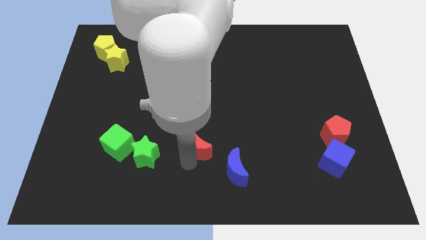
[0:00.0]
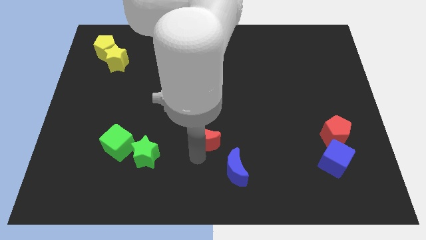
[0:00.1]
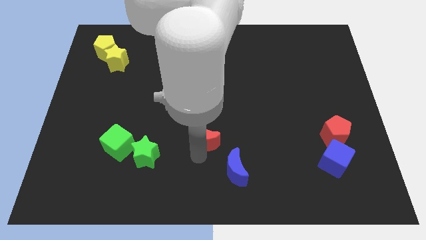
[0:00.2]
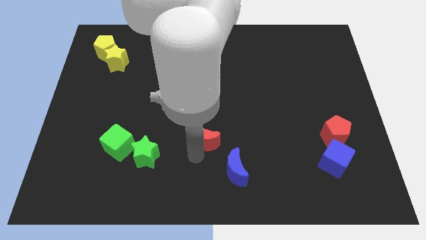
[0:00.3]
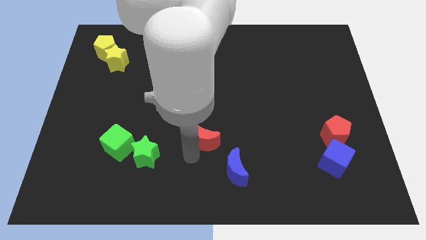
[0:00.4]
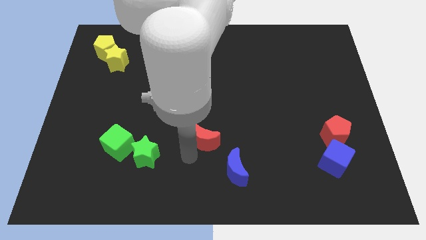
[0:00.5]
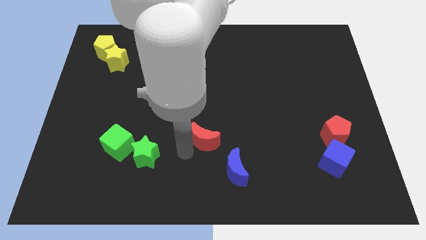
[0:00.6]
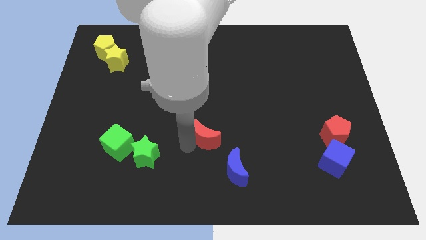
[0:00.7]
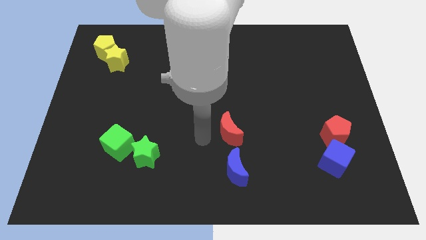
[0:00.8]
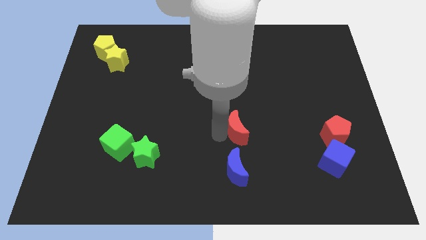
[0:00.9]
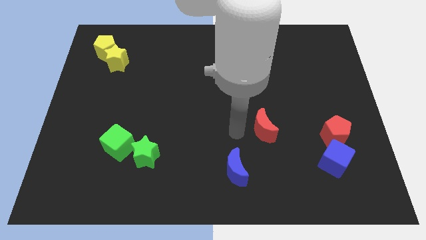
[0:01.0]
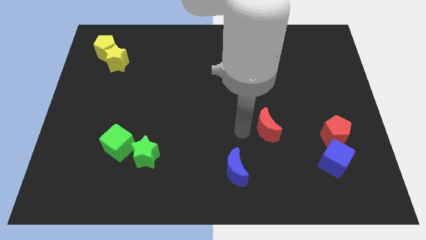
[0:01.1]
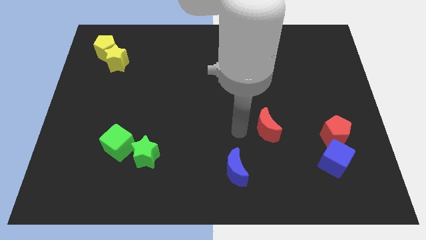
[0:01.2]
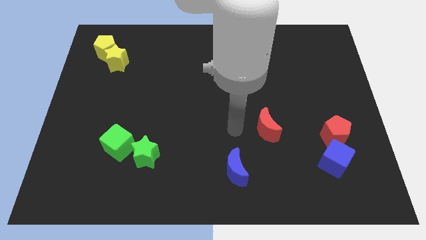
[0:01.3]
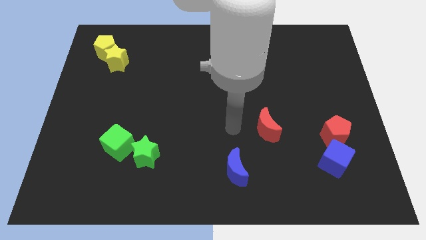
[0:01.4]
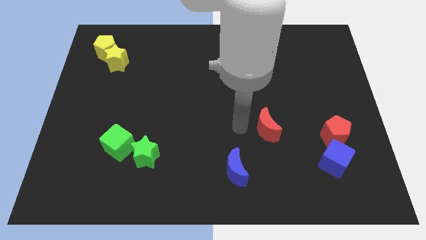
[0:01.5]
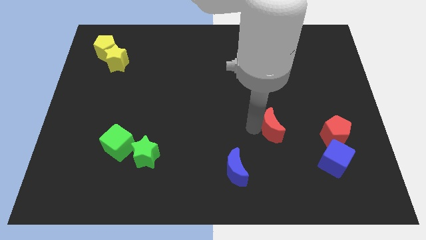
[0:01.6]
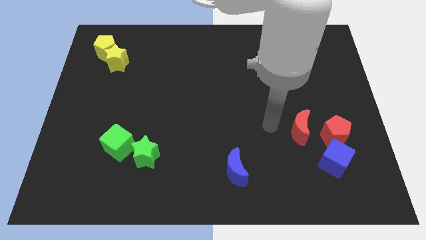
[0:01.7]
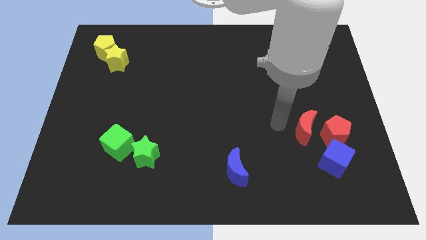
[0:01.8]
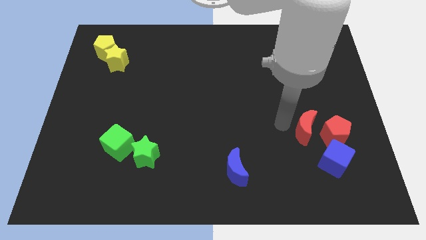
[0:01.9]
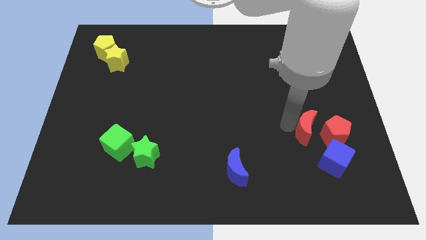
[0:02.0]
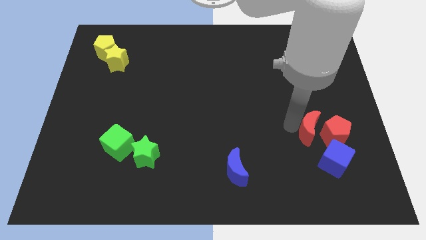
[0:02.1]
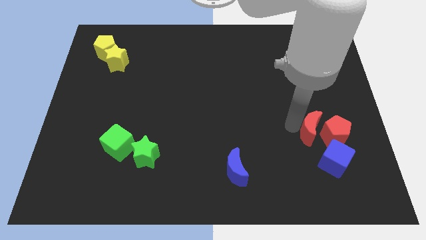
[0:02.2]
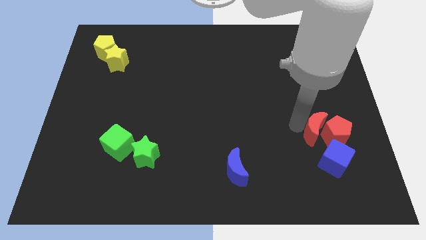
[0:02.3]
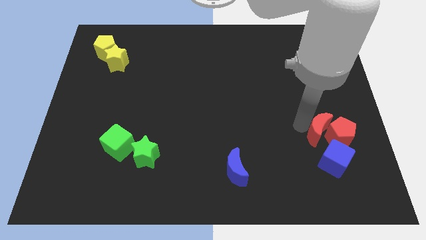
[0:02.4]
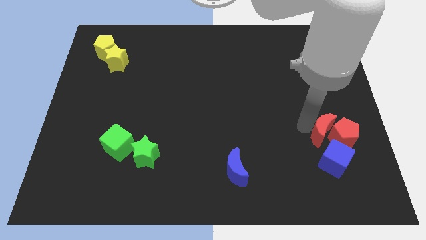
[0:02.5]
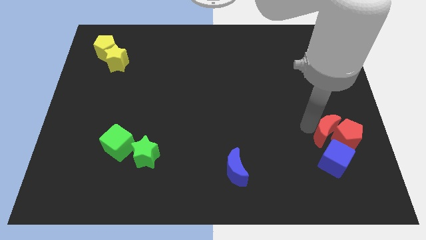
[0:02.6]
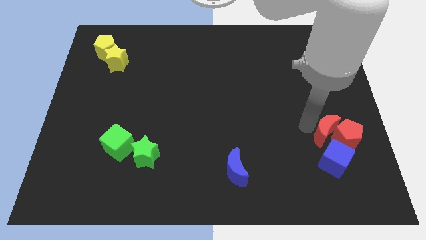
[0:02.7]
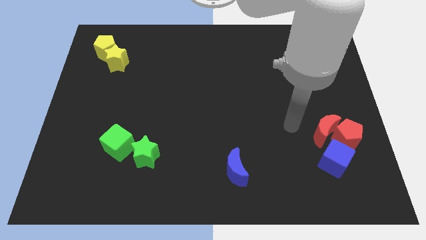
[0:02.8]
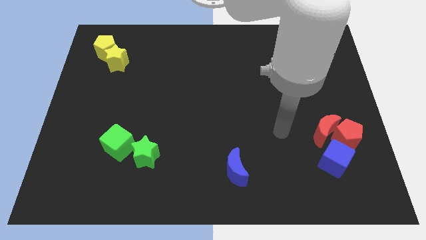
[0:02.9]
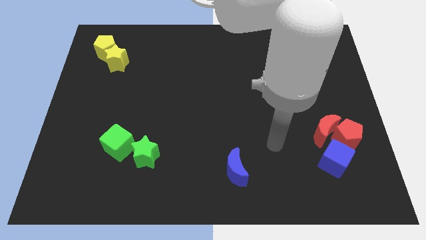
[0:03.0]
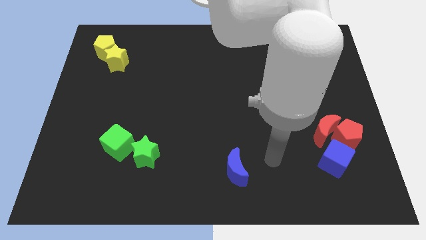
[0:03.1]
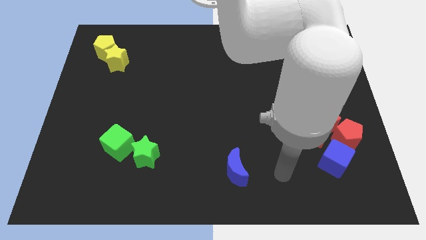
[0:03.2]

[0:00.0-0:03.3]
push the red crescent into the red pentagon

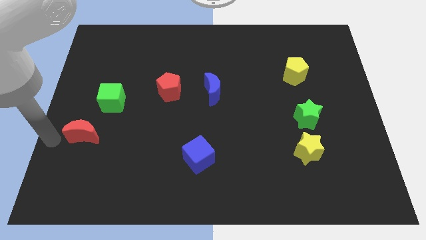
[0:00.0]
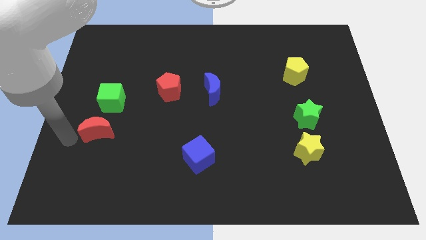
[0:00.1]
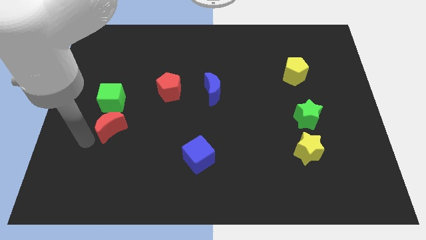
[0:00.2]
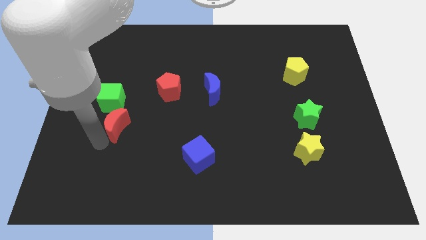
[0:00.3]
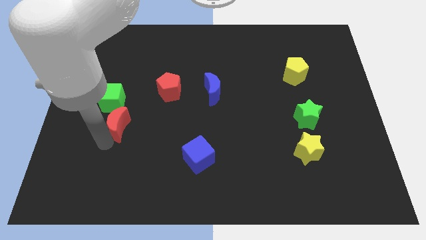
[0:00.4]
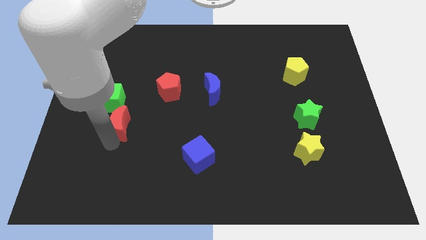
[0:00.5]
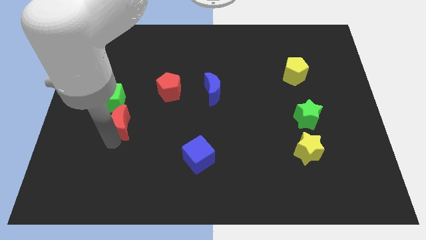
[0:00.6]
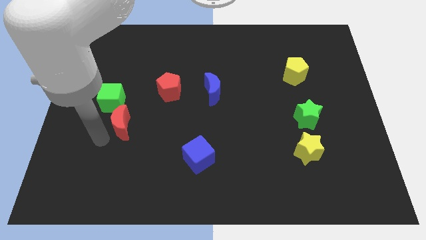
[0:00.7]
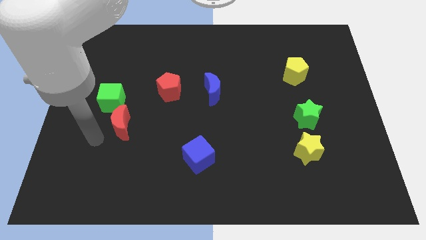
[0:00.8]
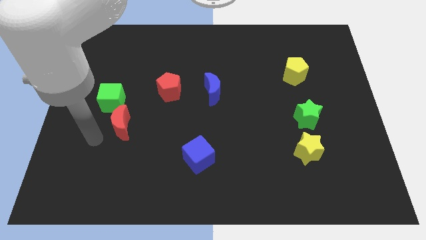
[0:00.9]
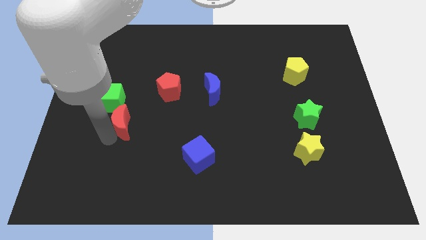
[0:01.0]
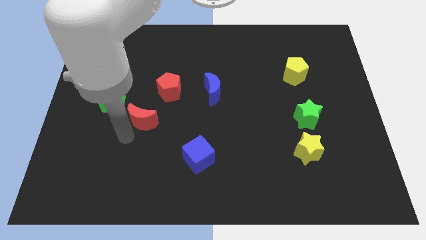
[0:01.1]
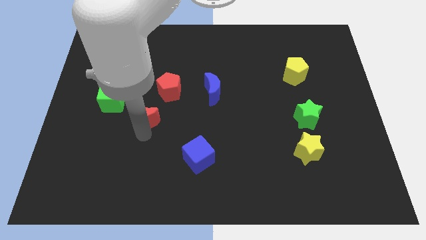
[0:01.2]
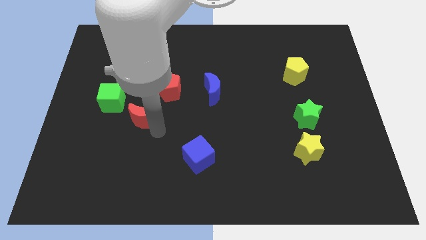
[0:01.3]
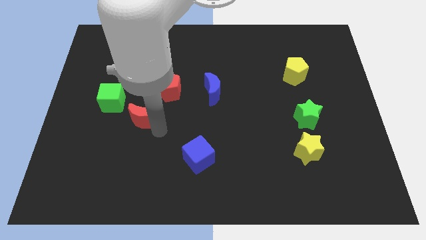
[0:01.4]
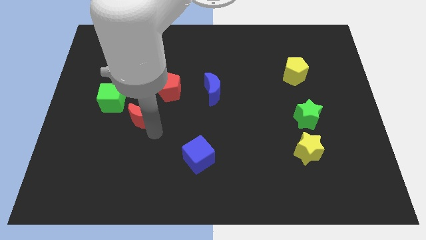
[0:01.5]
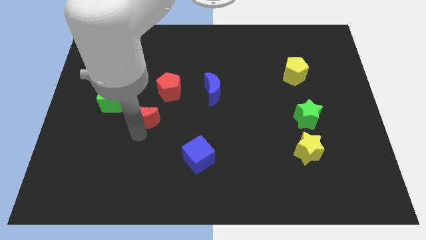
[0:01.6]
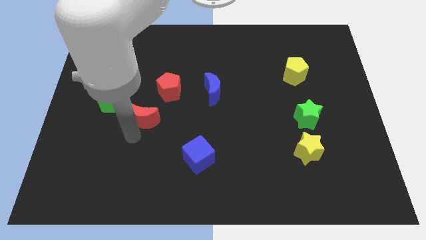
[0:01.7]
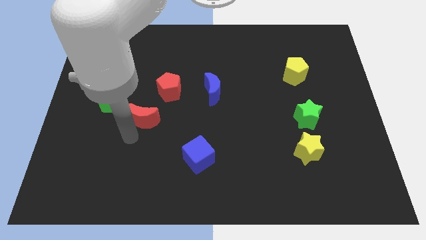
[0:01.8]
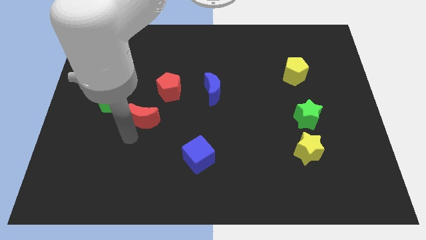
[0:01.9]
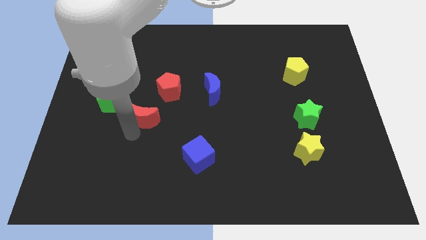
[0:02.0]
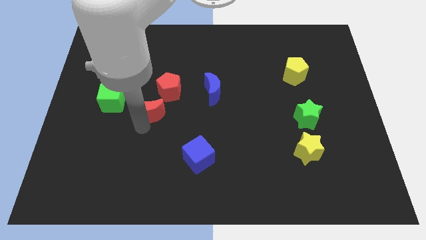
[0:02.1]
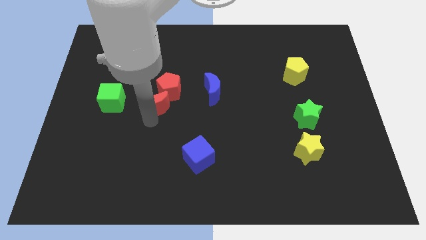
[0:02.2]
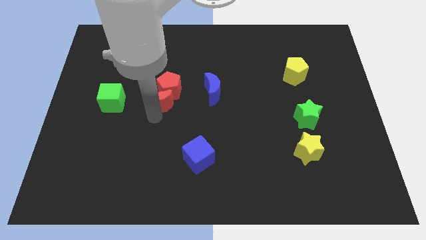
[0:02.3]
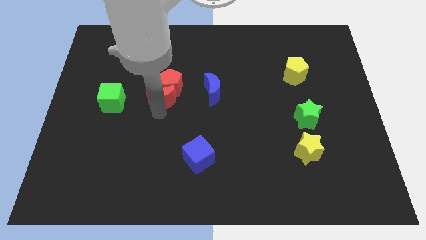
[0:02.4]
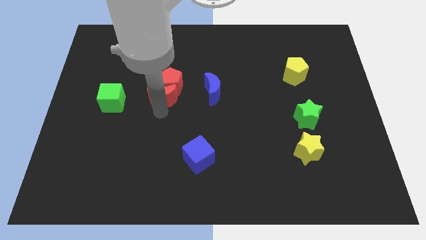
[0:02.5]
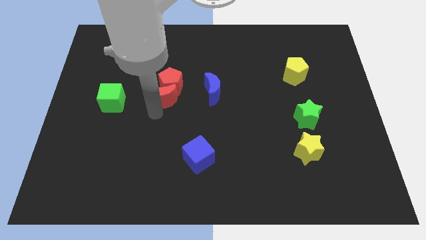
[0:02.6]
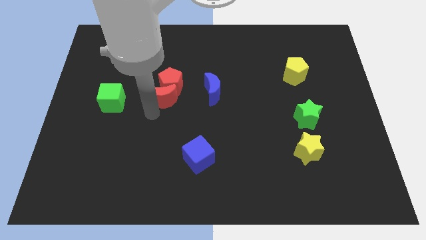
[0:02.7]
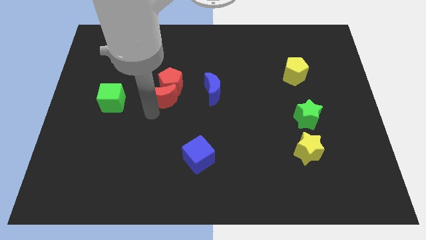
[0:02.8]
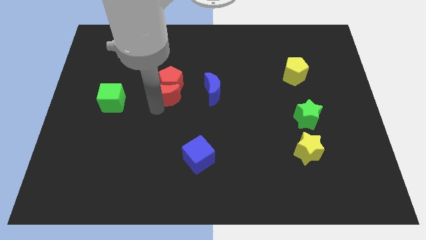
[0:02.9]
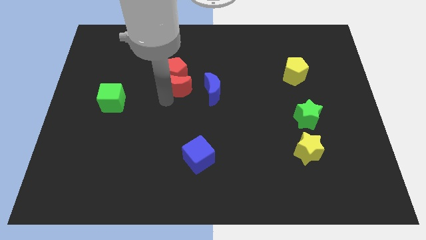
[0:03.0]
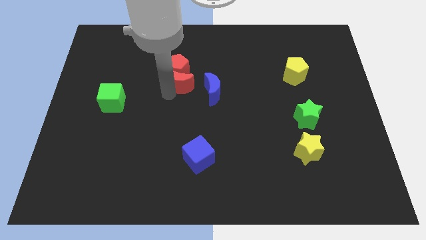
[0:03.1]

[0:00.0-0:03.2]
push the red crescent into the bottom of the red pentagon

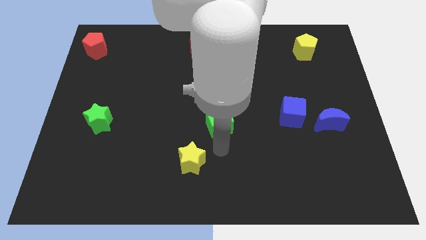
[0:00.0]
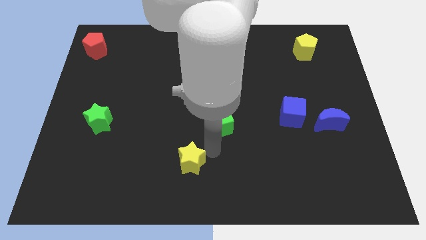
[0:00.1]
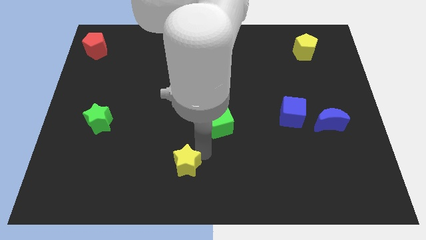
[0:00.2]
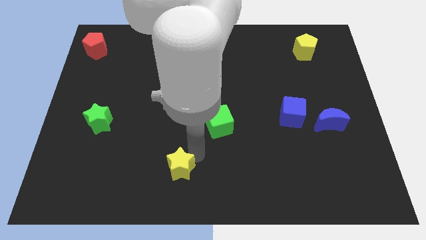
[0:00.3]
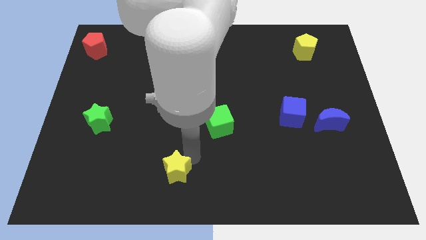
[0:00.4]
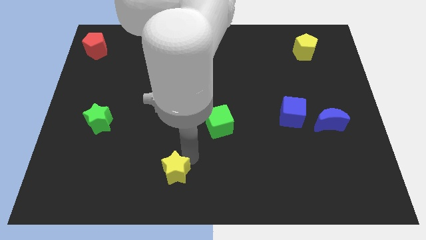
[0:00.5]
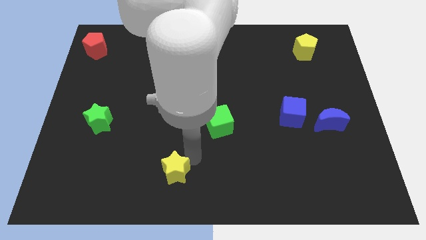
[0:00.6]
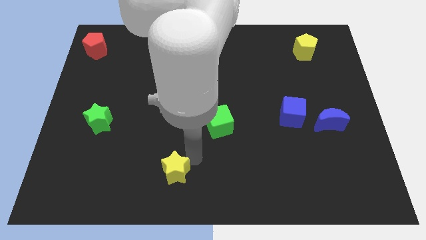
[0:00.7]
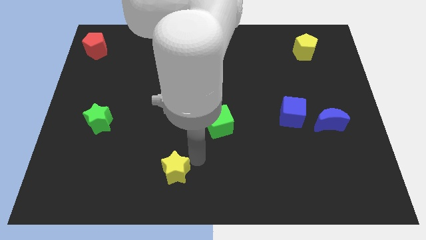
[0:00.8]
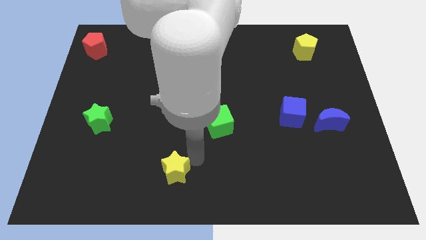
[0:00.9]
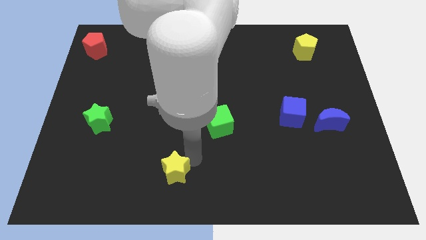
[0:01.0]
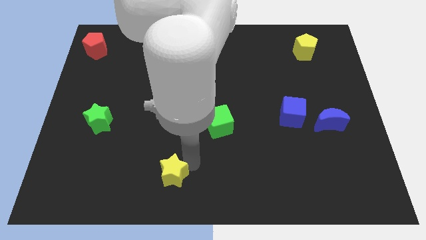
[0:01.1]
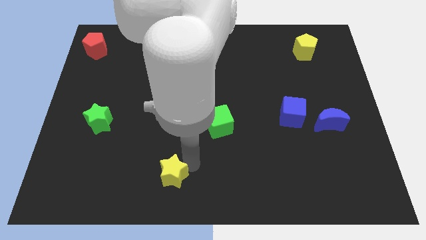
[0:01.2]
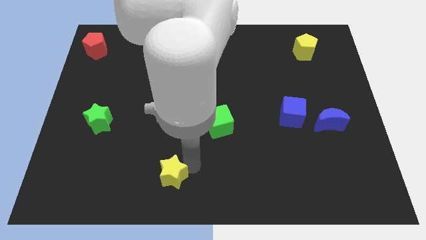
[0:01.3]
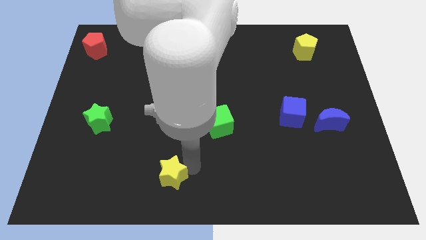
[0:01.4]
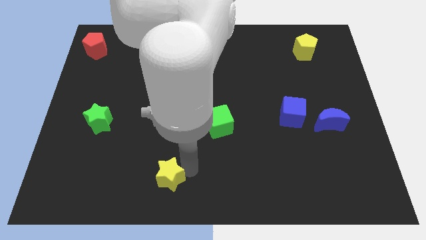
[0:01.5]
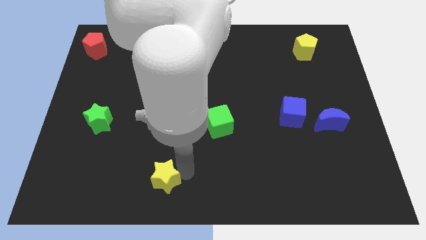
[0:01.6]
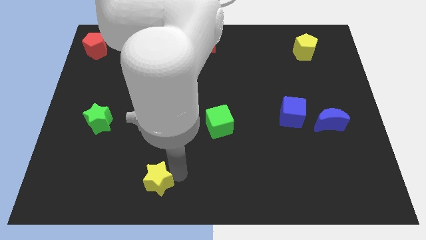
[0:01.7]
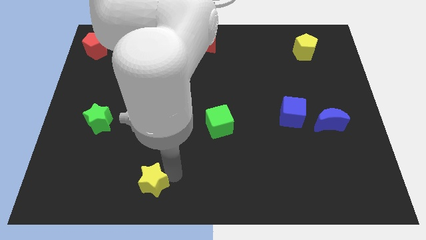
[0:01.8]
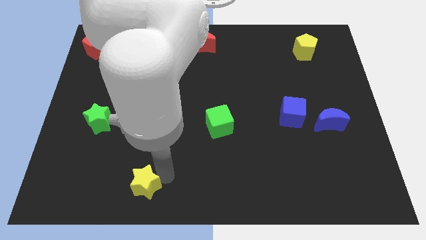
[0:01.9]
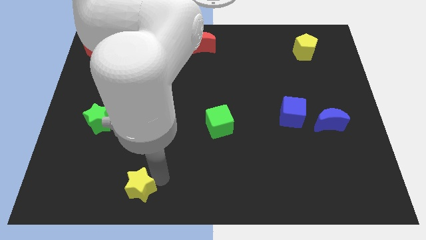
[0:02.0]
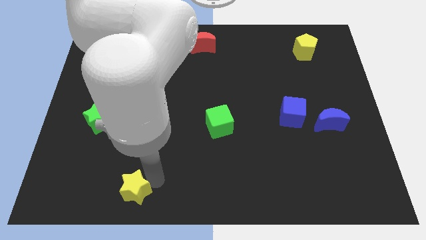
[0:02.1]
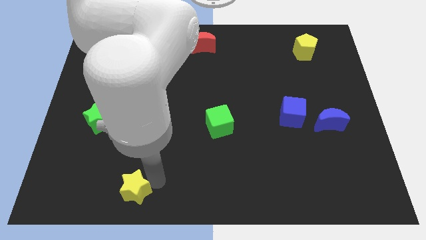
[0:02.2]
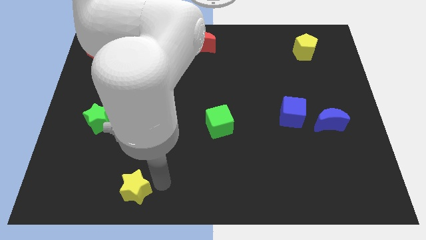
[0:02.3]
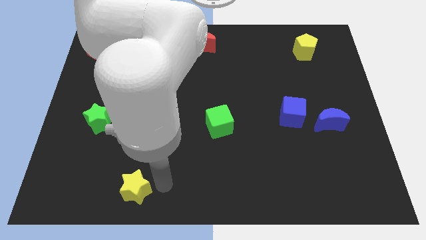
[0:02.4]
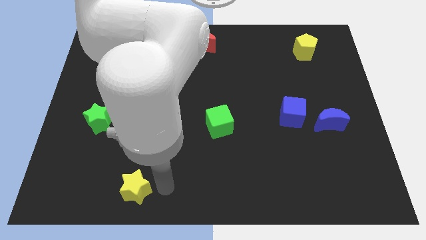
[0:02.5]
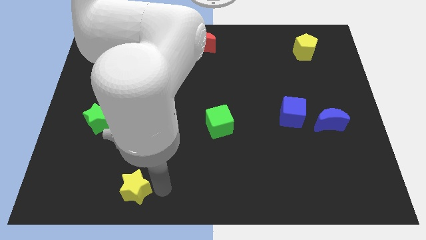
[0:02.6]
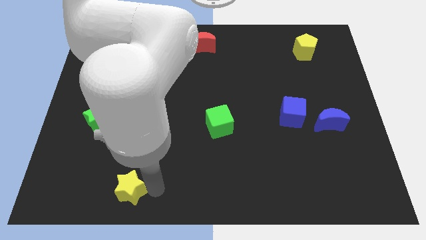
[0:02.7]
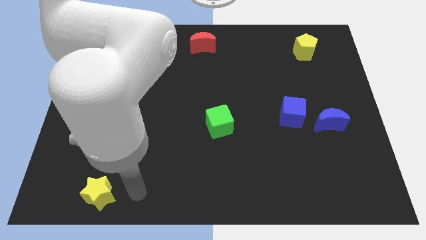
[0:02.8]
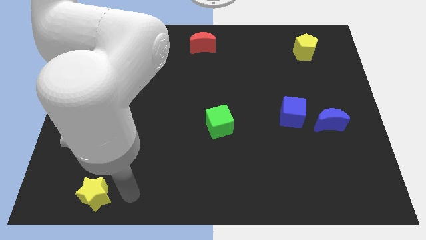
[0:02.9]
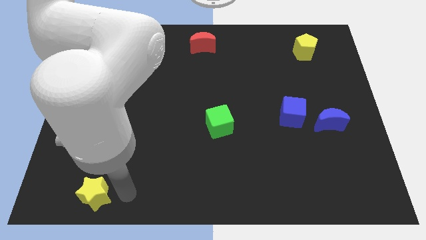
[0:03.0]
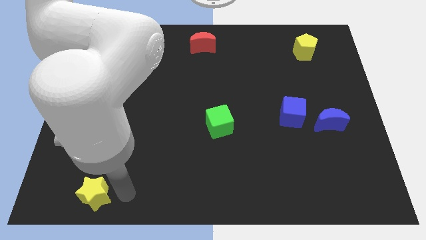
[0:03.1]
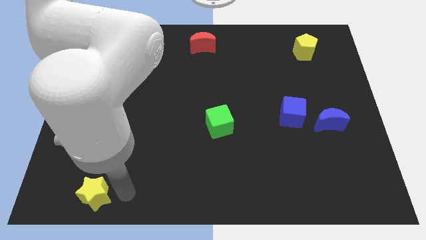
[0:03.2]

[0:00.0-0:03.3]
push the yellow star slightly towards the bottom left corner of the board
